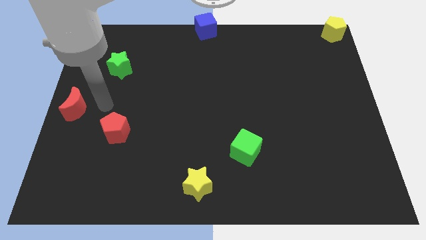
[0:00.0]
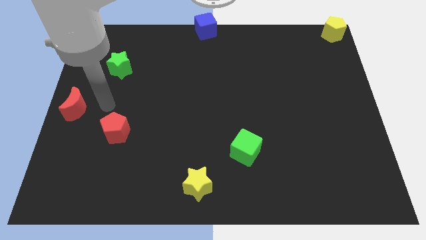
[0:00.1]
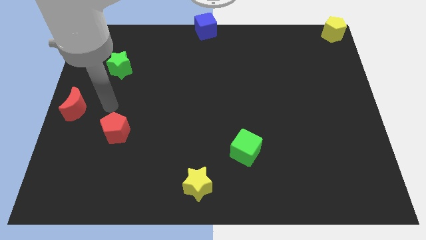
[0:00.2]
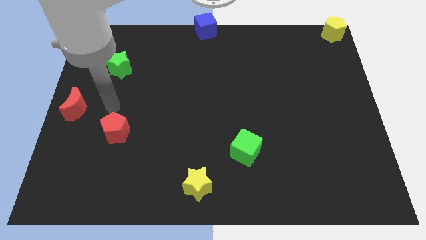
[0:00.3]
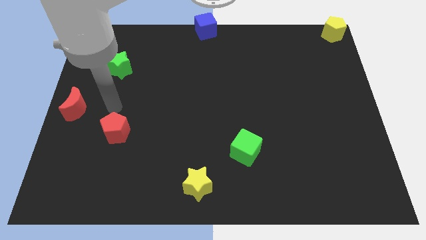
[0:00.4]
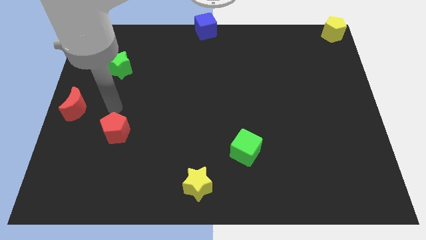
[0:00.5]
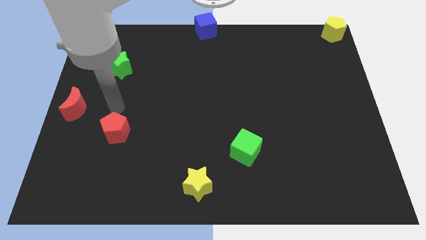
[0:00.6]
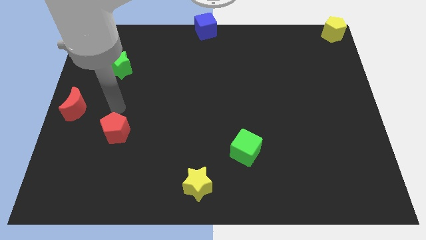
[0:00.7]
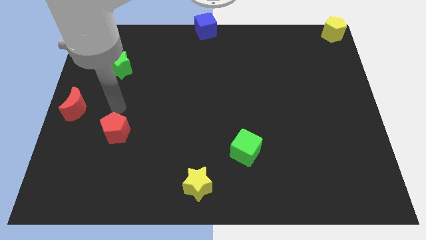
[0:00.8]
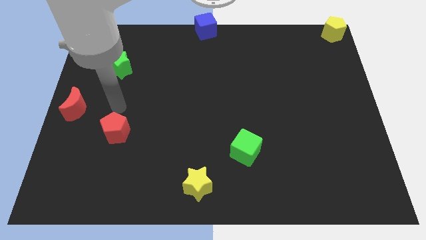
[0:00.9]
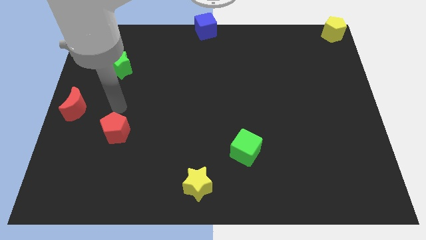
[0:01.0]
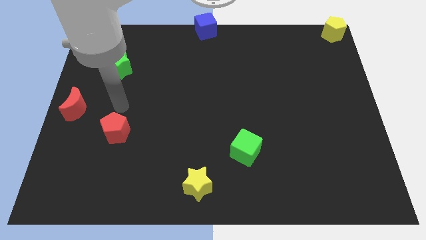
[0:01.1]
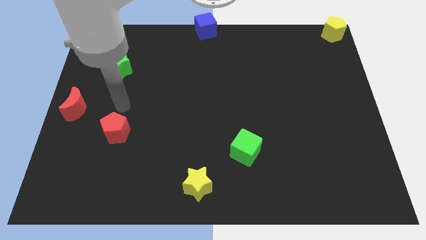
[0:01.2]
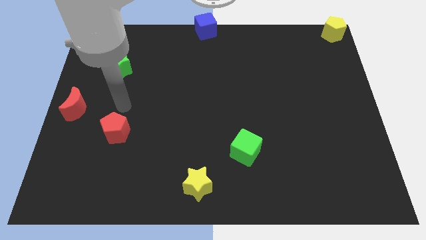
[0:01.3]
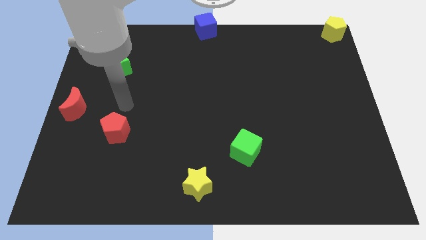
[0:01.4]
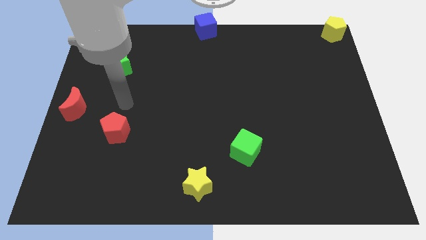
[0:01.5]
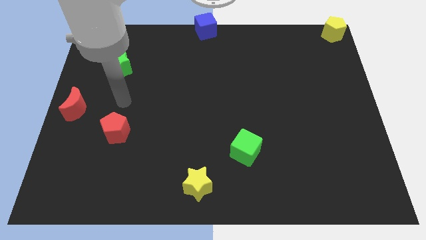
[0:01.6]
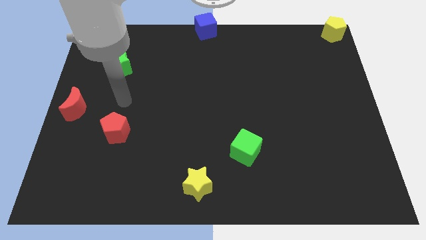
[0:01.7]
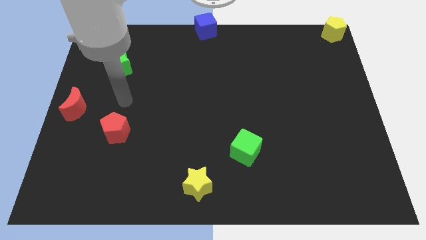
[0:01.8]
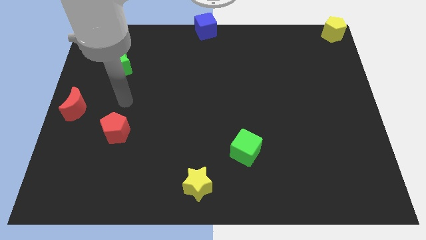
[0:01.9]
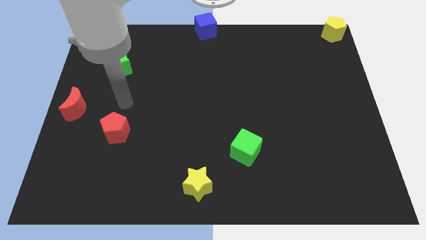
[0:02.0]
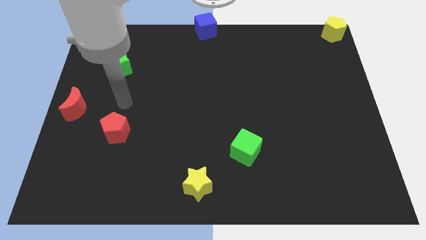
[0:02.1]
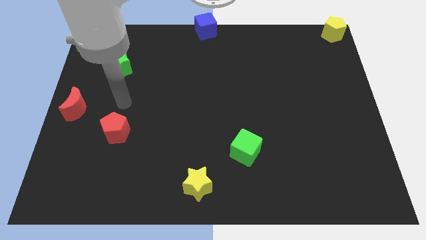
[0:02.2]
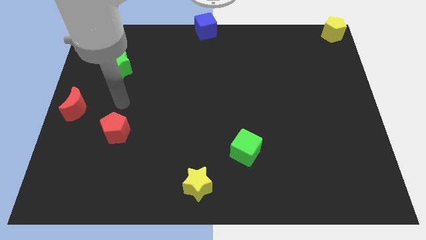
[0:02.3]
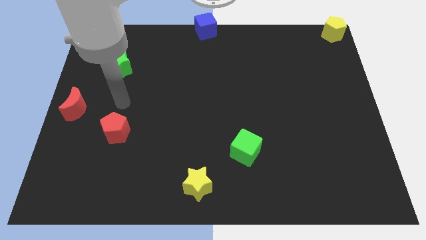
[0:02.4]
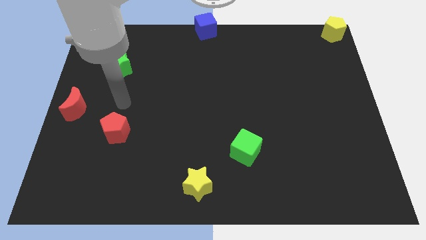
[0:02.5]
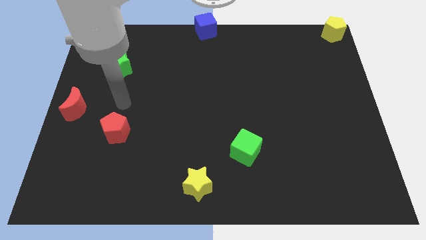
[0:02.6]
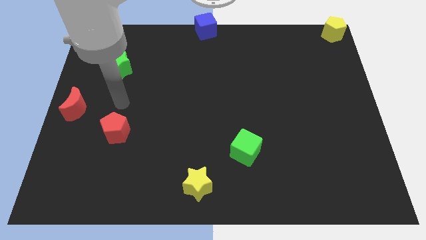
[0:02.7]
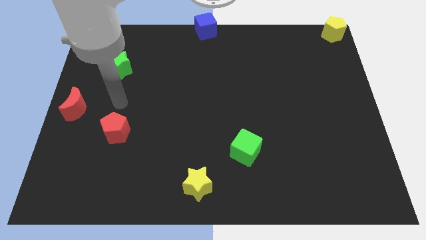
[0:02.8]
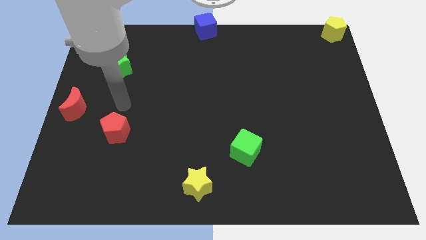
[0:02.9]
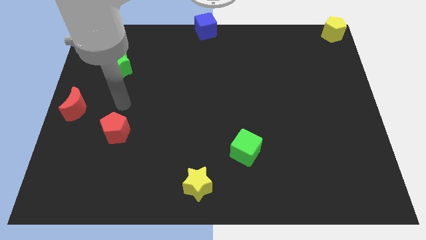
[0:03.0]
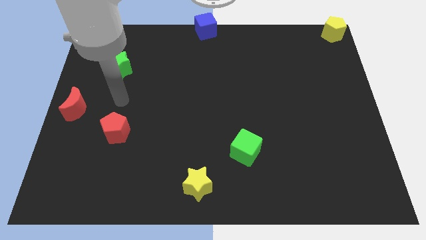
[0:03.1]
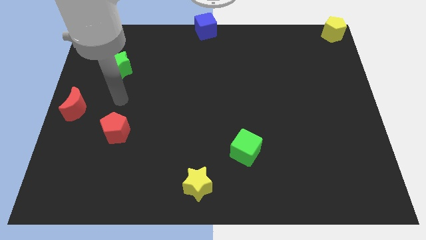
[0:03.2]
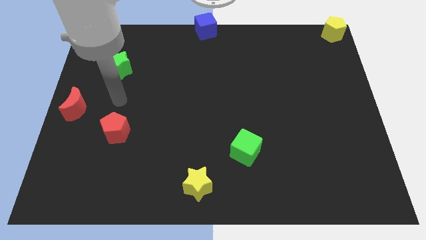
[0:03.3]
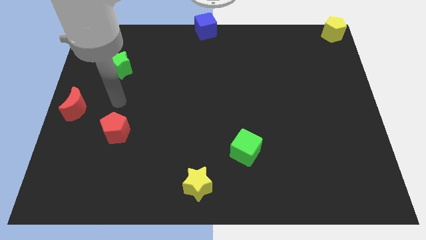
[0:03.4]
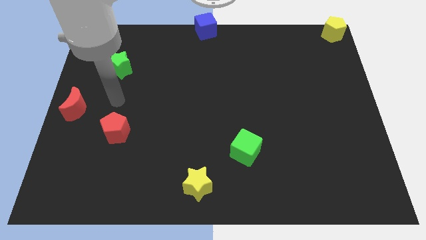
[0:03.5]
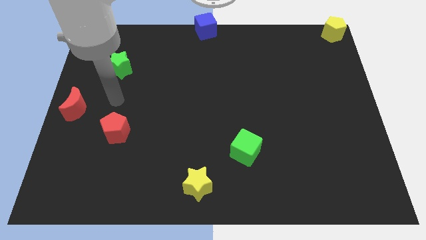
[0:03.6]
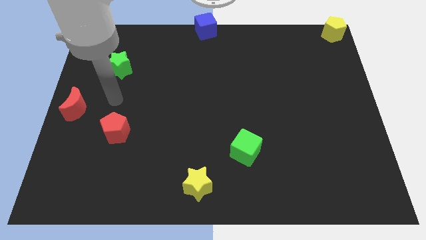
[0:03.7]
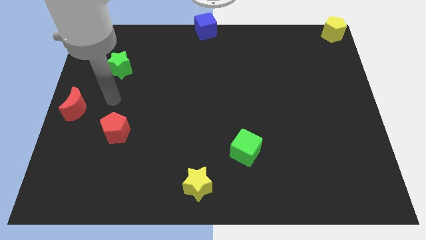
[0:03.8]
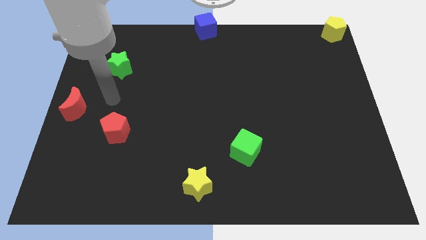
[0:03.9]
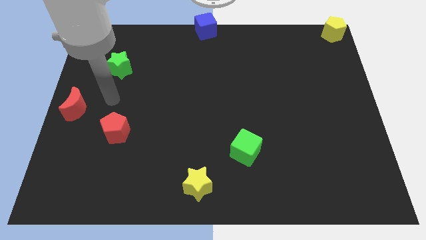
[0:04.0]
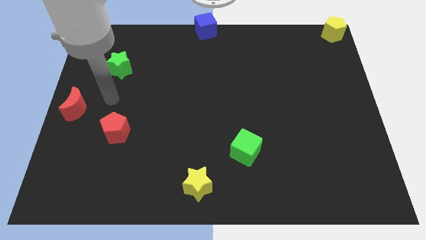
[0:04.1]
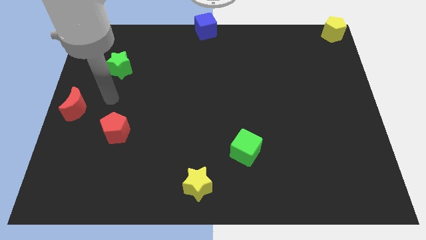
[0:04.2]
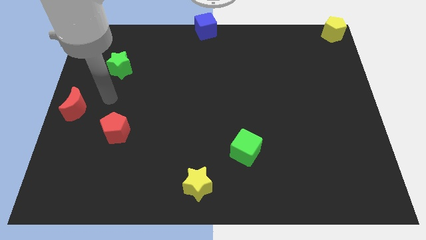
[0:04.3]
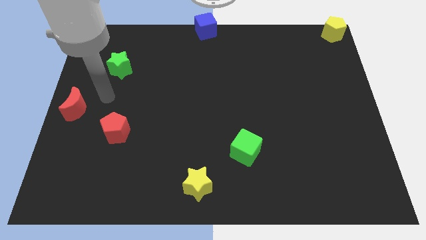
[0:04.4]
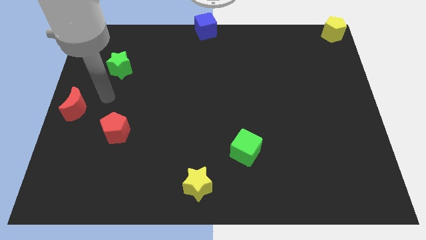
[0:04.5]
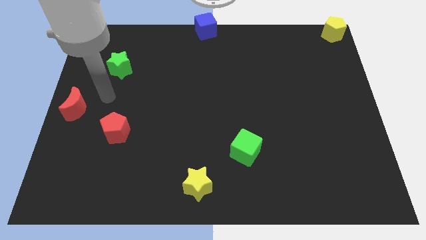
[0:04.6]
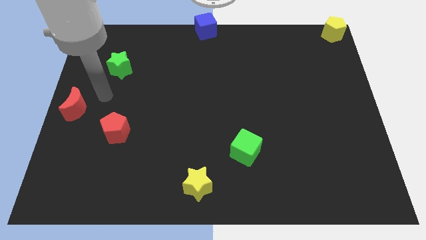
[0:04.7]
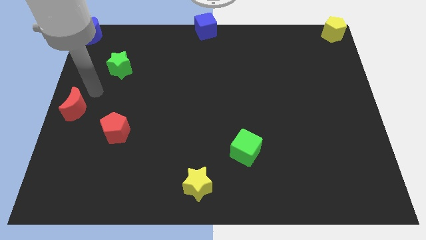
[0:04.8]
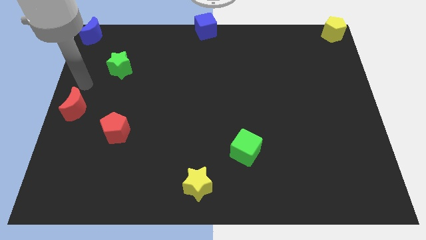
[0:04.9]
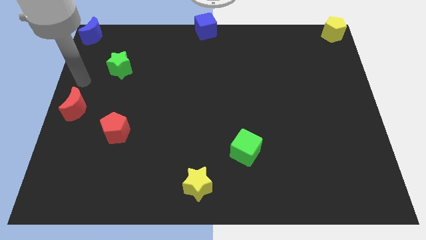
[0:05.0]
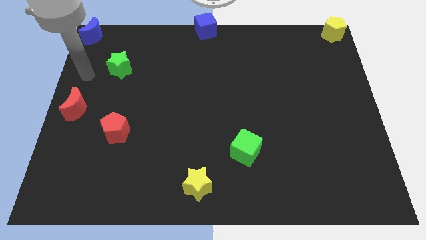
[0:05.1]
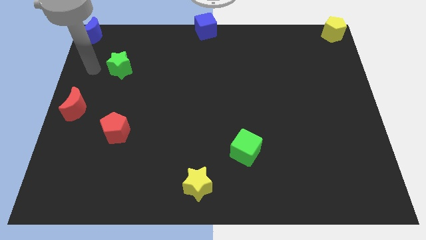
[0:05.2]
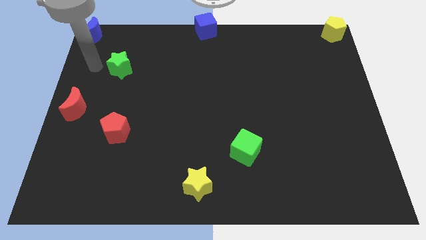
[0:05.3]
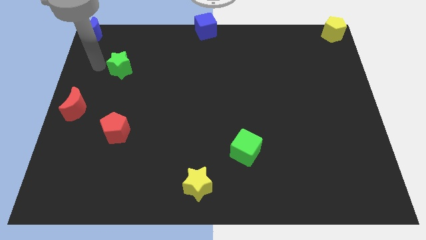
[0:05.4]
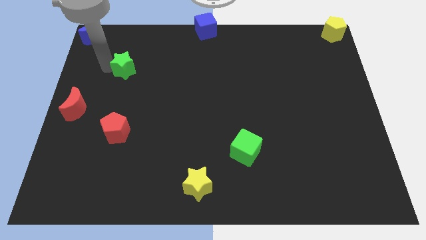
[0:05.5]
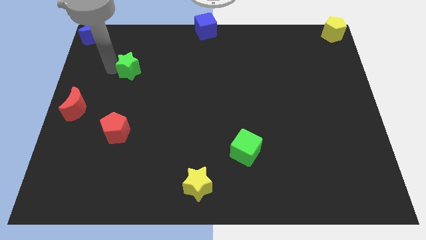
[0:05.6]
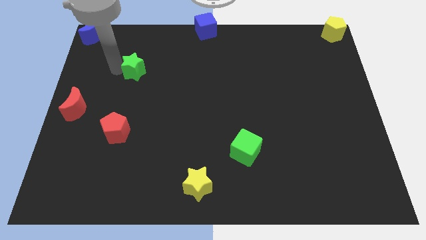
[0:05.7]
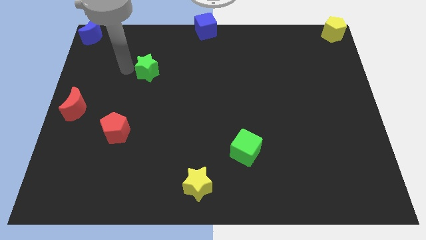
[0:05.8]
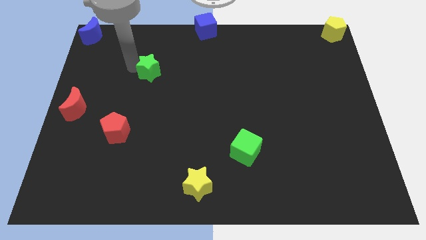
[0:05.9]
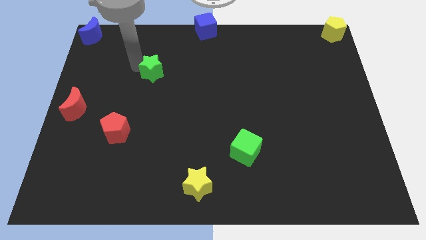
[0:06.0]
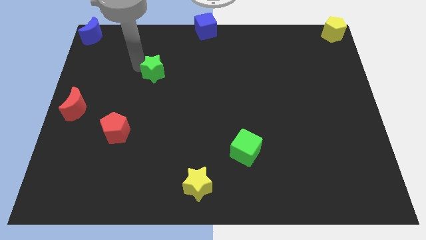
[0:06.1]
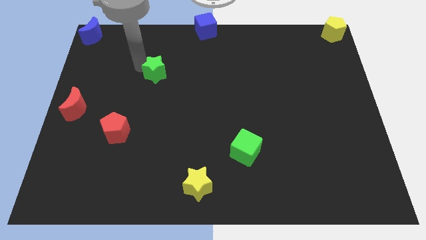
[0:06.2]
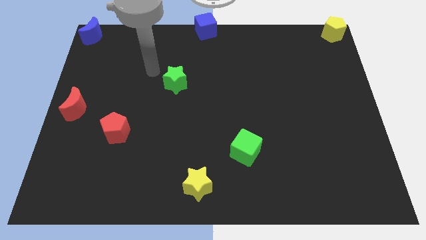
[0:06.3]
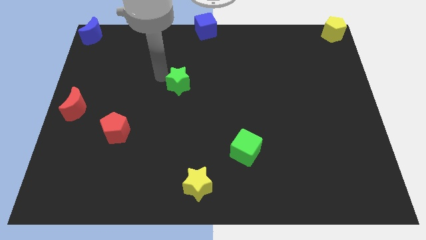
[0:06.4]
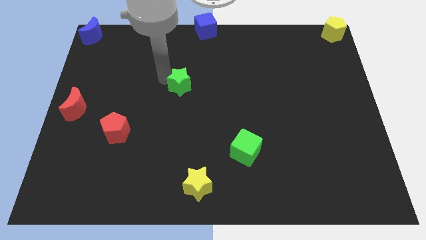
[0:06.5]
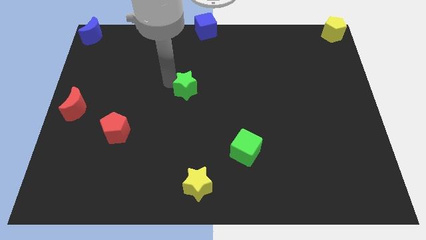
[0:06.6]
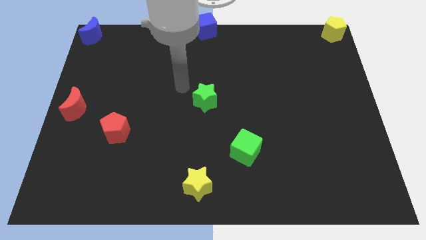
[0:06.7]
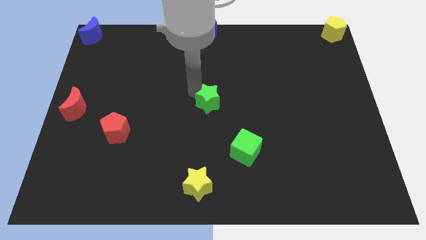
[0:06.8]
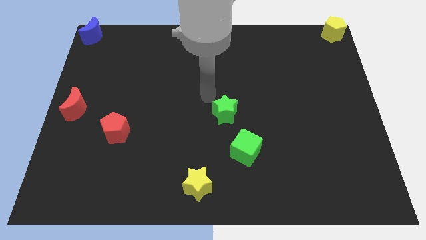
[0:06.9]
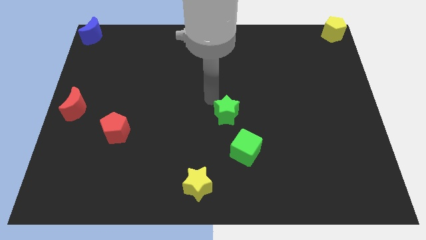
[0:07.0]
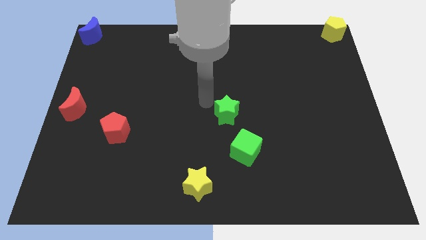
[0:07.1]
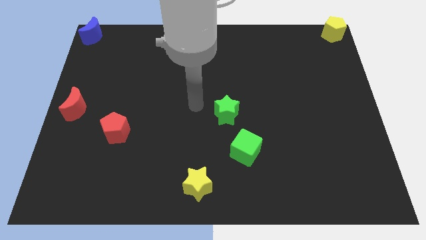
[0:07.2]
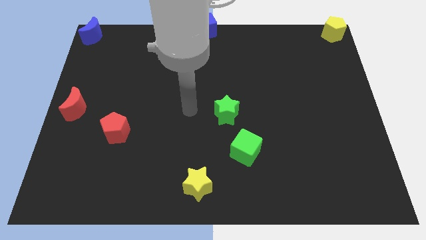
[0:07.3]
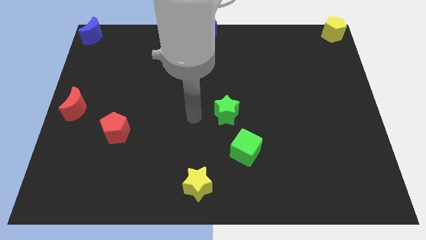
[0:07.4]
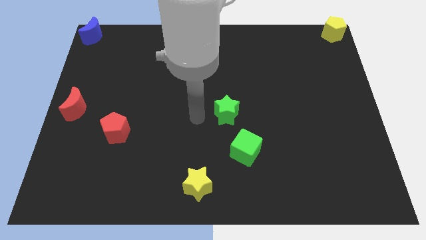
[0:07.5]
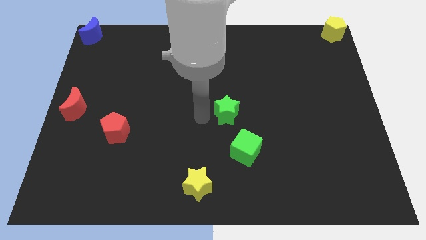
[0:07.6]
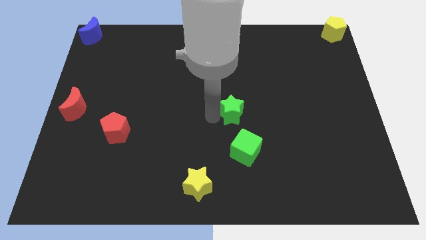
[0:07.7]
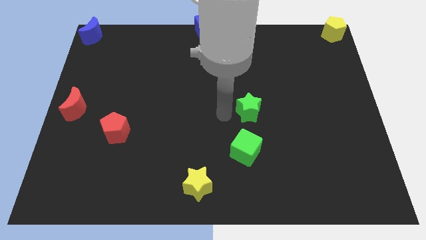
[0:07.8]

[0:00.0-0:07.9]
move the green star above the green cube

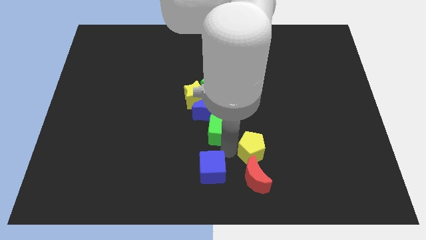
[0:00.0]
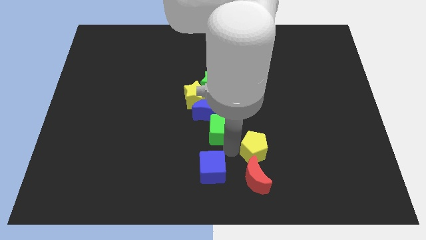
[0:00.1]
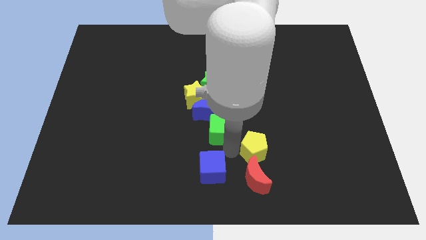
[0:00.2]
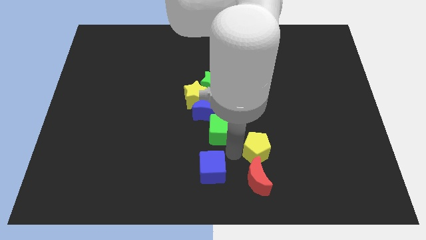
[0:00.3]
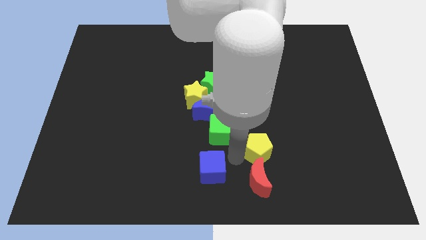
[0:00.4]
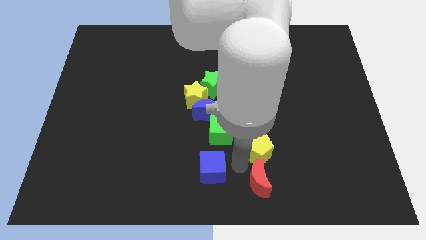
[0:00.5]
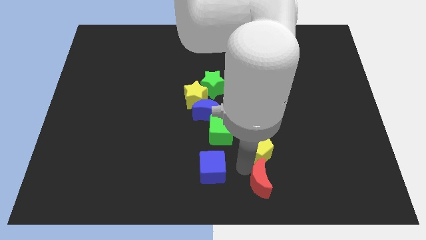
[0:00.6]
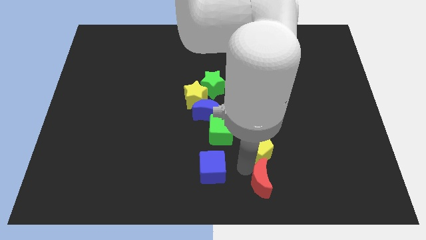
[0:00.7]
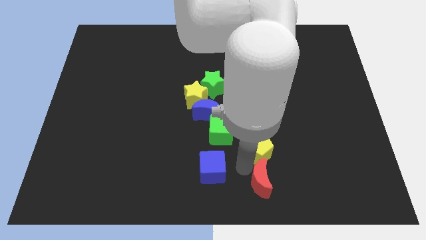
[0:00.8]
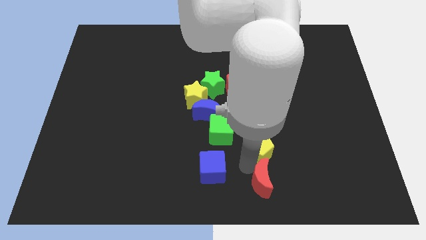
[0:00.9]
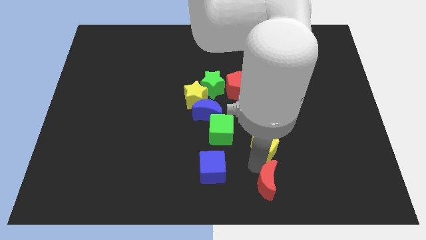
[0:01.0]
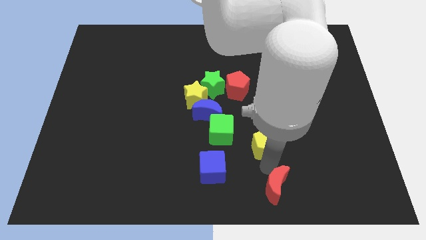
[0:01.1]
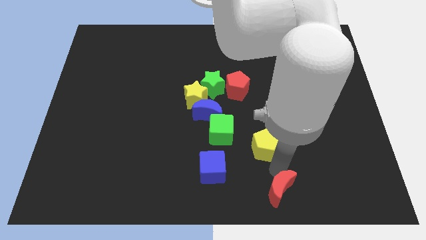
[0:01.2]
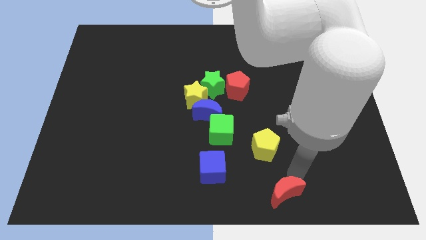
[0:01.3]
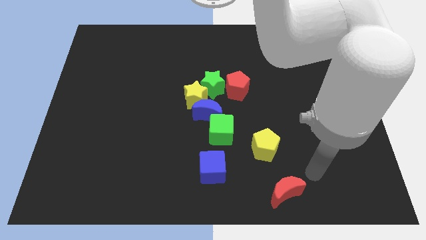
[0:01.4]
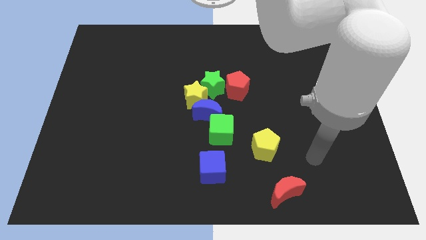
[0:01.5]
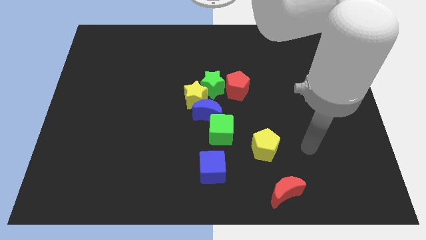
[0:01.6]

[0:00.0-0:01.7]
separate the red crescent from the yellow pentagon
